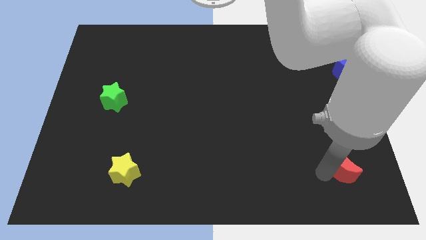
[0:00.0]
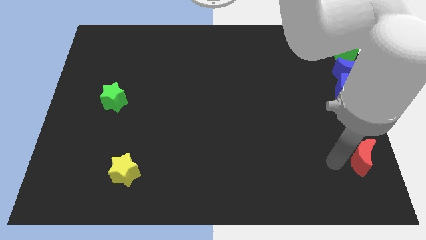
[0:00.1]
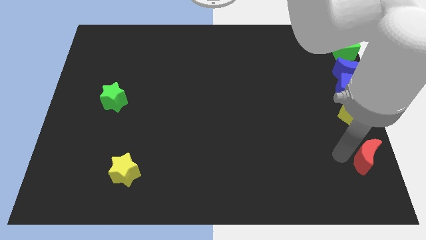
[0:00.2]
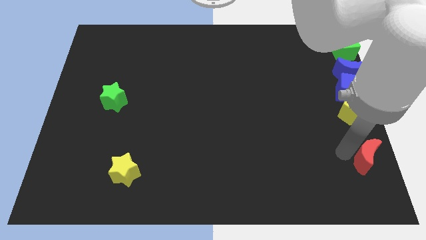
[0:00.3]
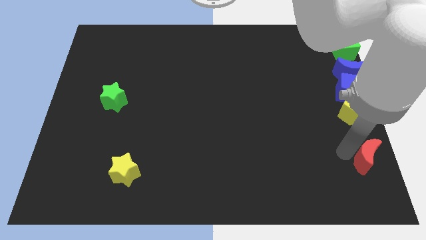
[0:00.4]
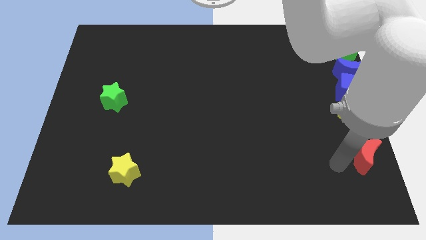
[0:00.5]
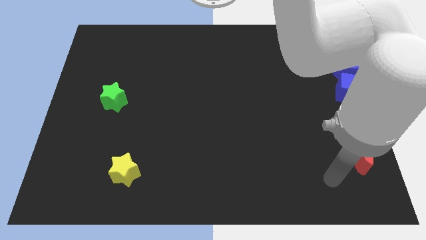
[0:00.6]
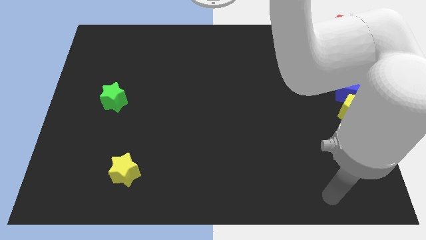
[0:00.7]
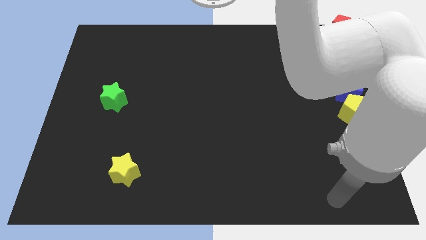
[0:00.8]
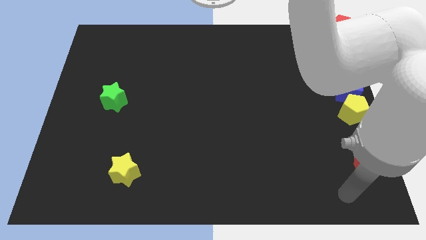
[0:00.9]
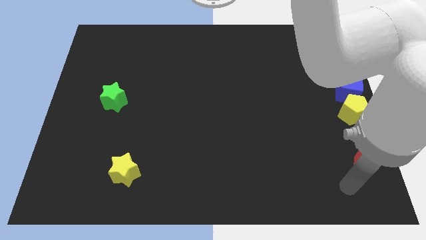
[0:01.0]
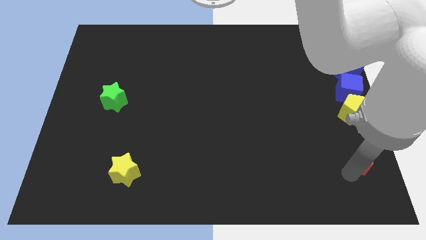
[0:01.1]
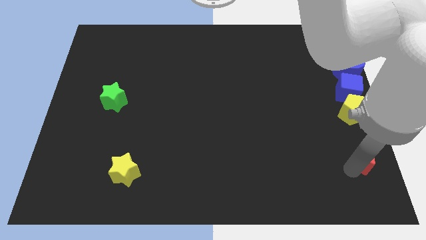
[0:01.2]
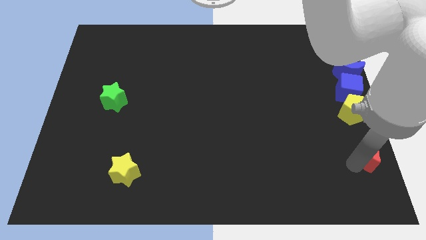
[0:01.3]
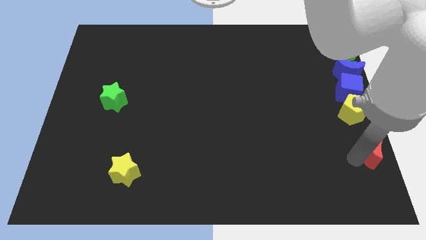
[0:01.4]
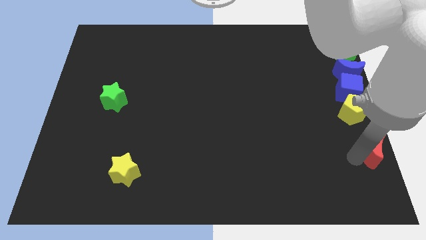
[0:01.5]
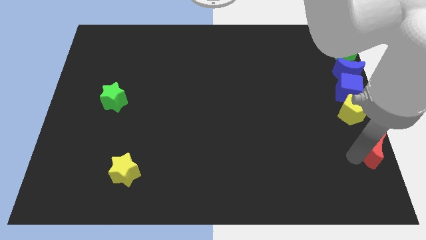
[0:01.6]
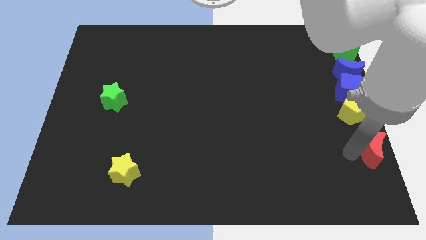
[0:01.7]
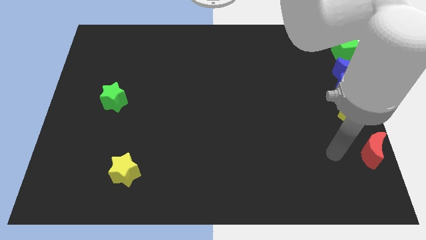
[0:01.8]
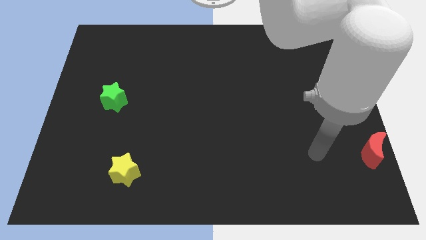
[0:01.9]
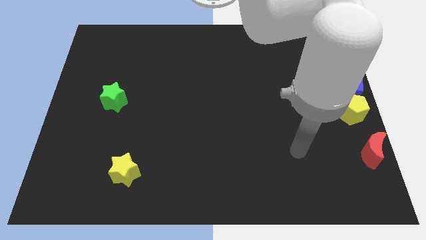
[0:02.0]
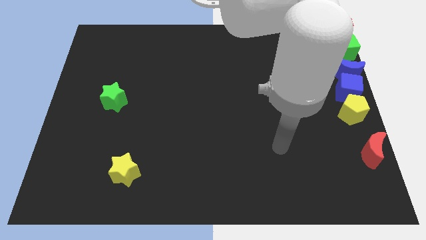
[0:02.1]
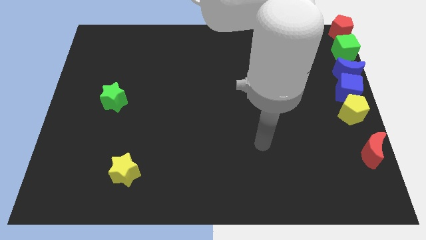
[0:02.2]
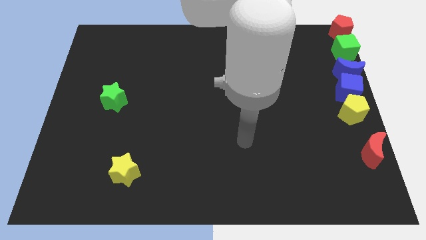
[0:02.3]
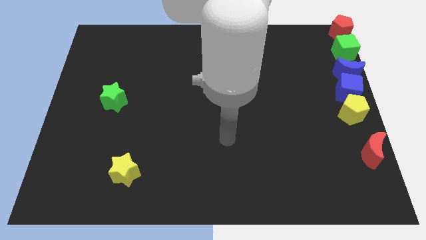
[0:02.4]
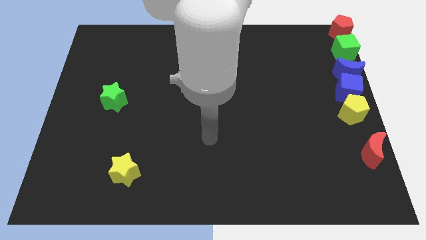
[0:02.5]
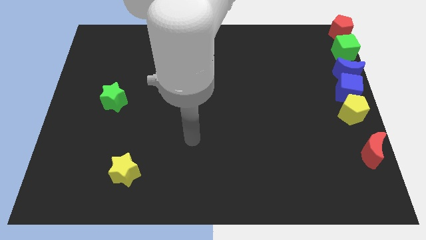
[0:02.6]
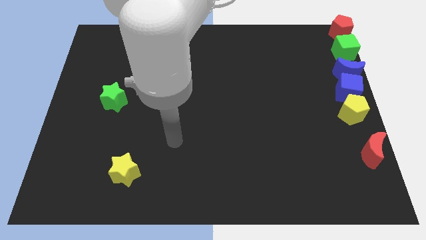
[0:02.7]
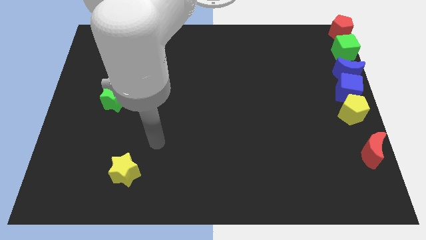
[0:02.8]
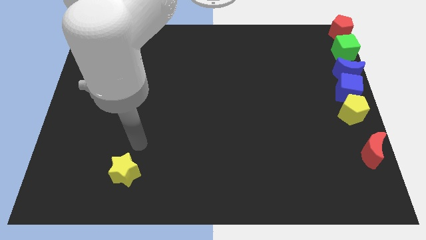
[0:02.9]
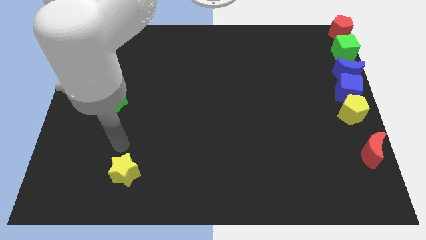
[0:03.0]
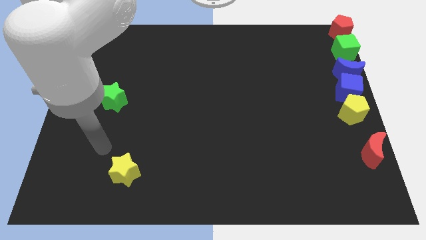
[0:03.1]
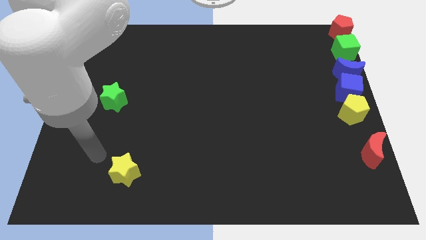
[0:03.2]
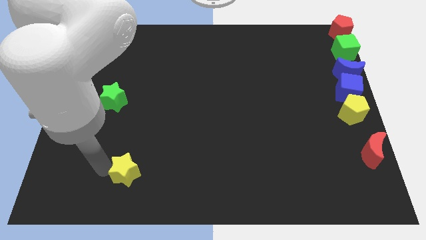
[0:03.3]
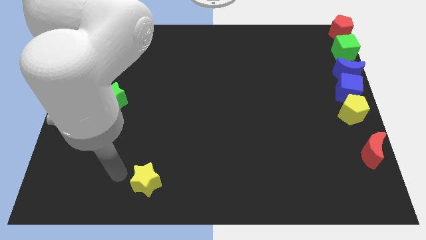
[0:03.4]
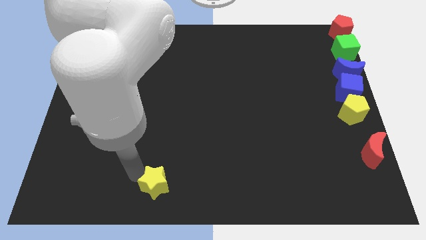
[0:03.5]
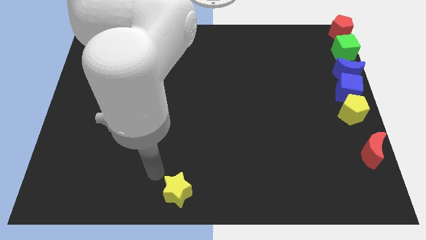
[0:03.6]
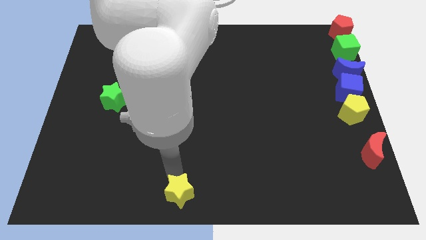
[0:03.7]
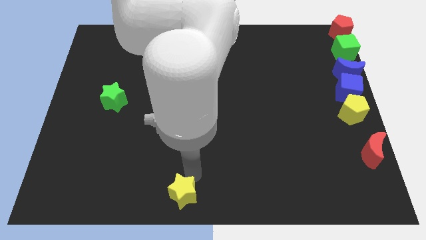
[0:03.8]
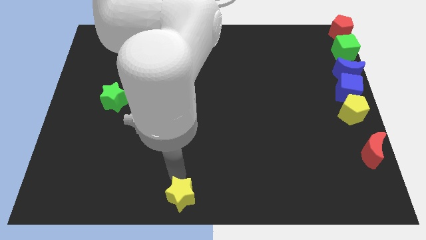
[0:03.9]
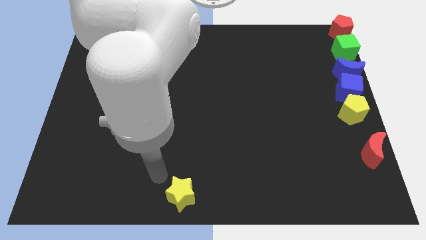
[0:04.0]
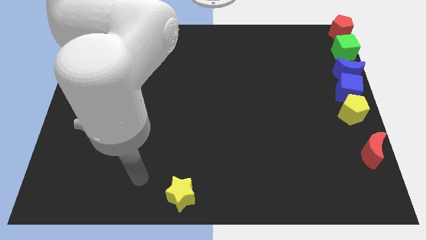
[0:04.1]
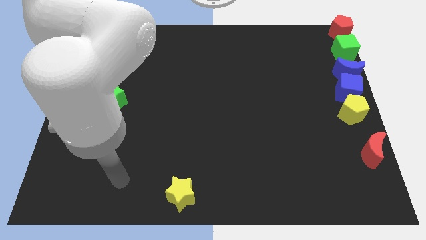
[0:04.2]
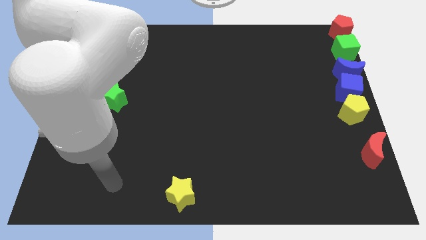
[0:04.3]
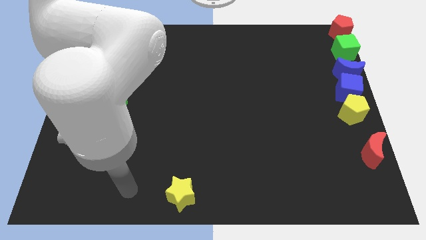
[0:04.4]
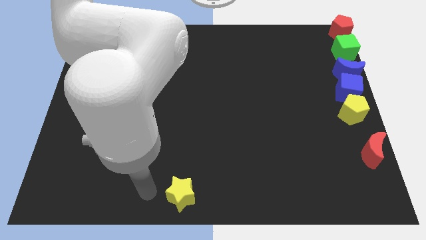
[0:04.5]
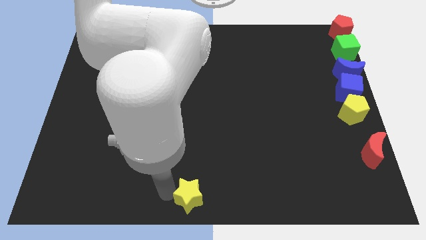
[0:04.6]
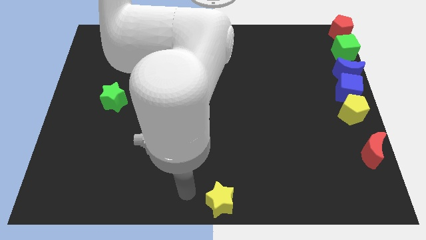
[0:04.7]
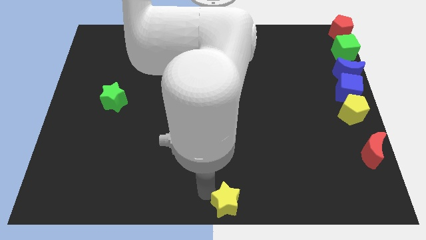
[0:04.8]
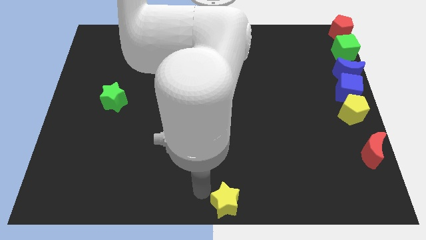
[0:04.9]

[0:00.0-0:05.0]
move the star to the bottom center of the board

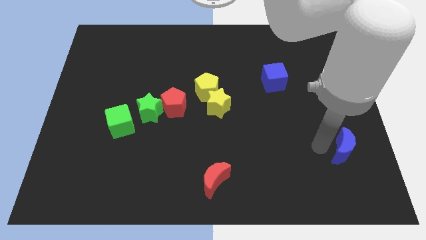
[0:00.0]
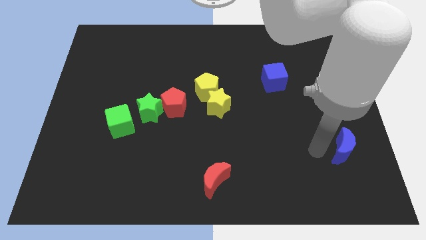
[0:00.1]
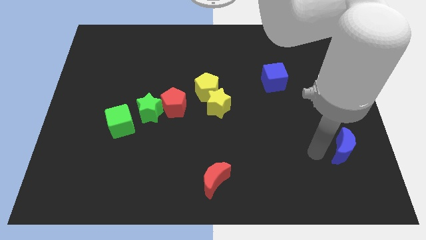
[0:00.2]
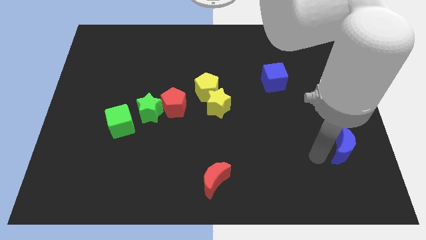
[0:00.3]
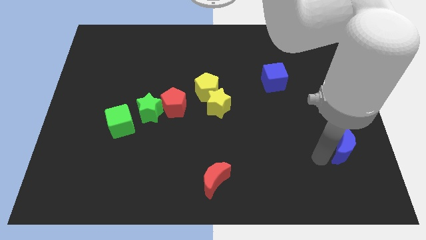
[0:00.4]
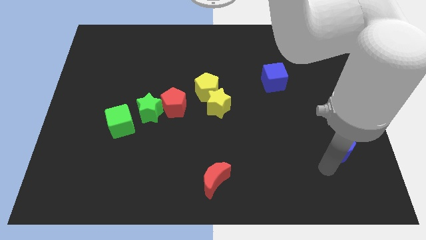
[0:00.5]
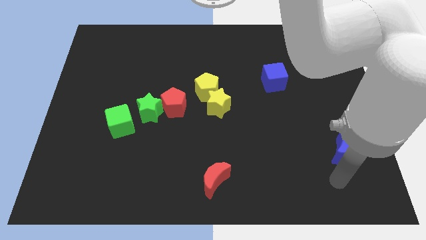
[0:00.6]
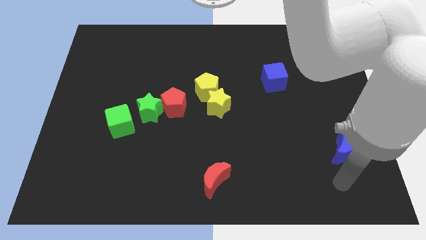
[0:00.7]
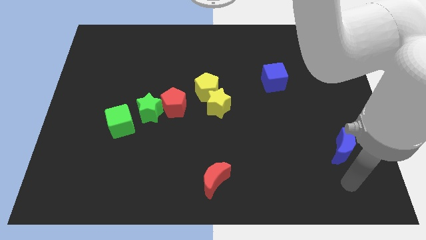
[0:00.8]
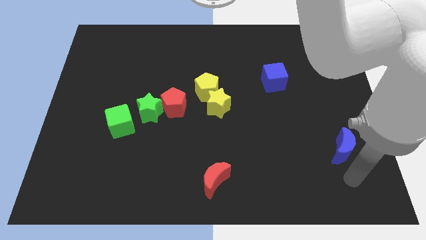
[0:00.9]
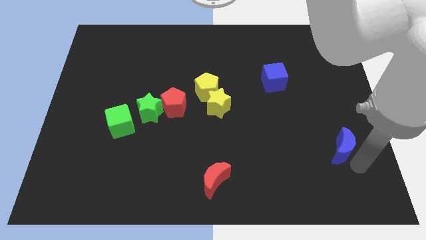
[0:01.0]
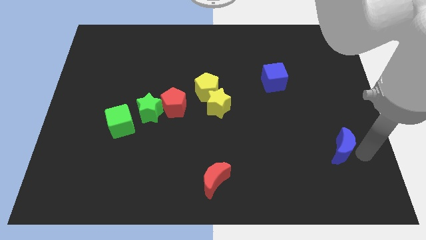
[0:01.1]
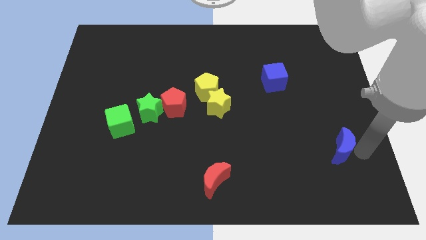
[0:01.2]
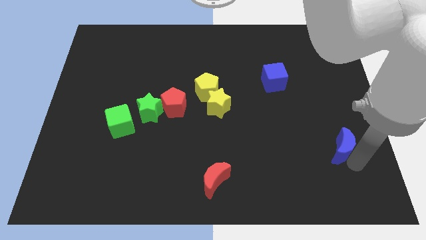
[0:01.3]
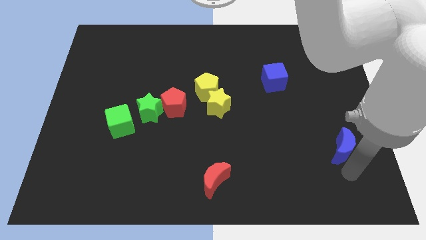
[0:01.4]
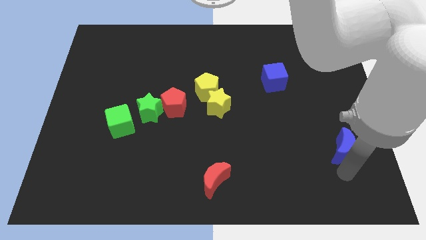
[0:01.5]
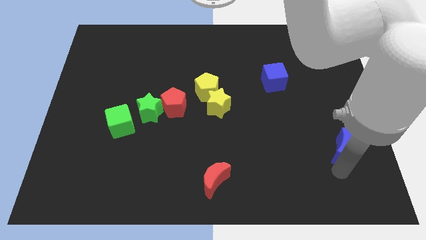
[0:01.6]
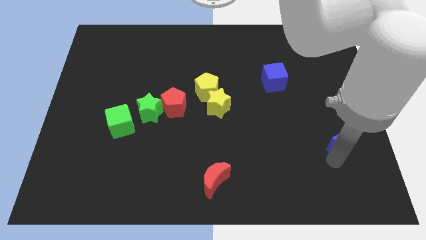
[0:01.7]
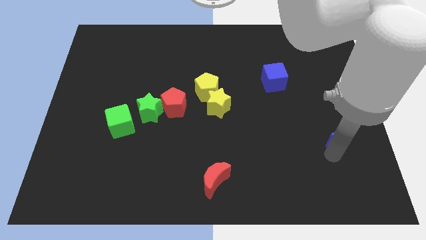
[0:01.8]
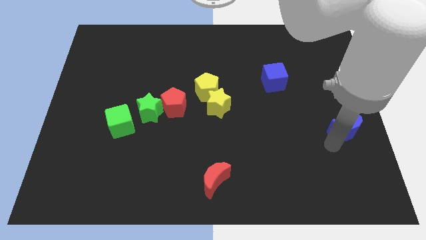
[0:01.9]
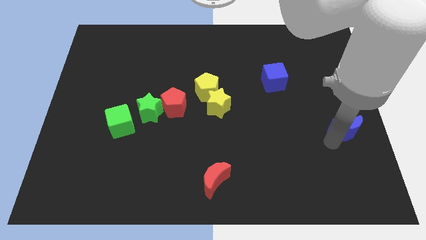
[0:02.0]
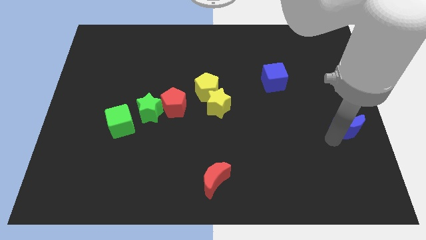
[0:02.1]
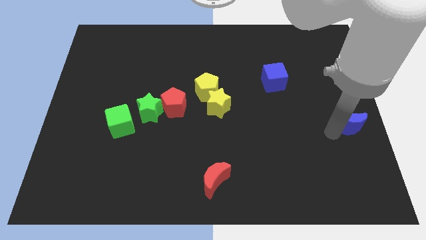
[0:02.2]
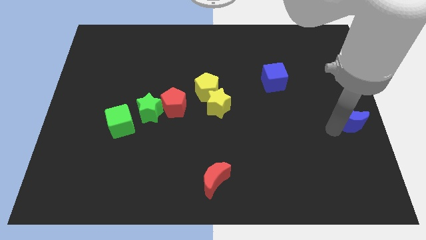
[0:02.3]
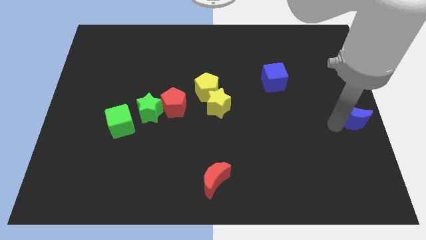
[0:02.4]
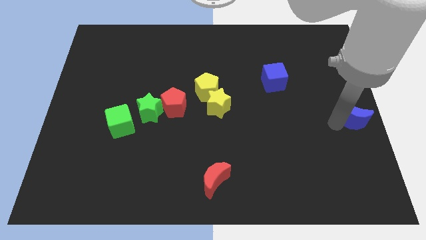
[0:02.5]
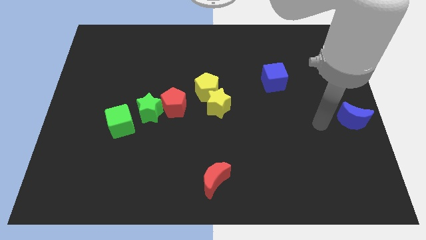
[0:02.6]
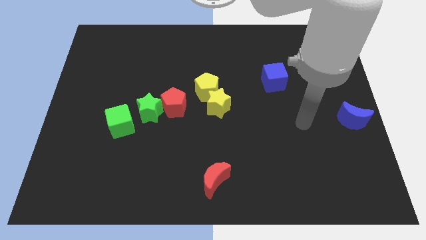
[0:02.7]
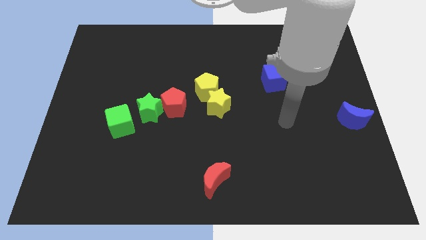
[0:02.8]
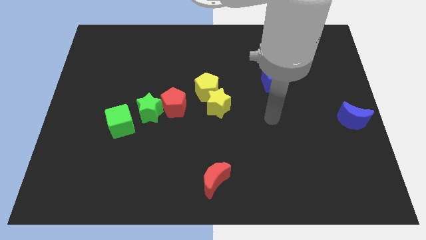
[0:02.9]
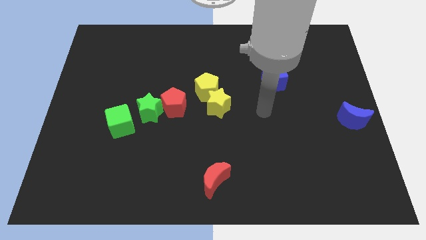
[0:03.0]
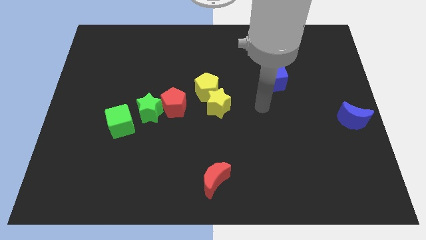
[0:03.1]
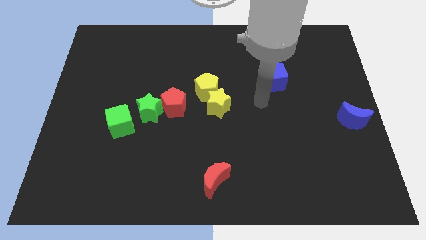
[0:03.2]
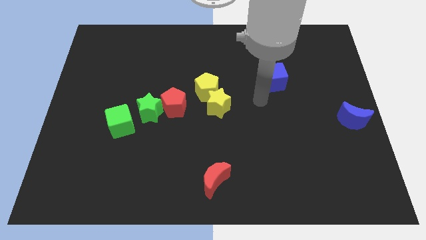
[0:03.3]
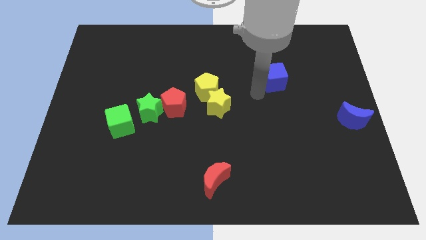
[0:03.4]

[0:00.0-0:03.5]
place the blue moon at the center right of the board

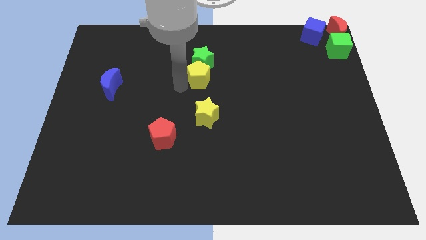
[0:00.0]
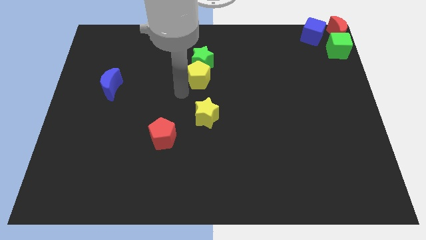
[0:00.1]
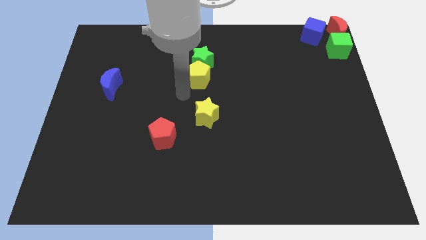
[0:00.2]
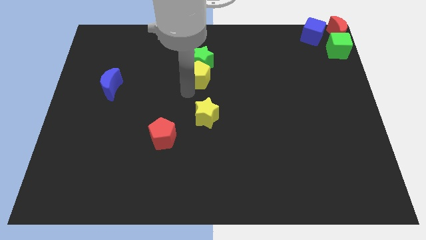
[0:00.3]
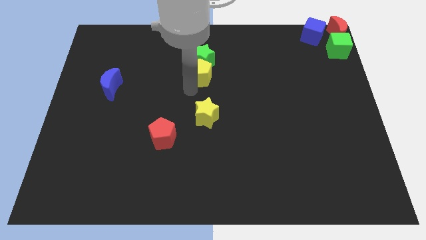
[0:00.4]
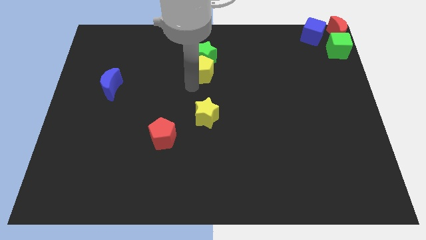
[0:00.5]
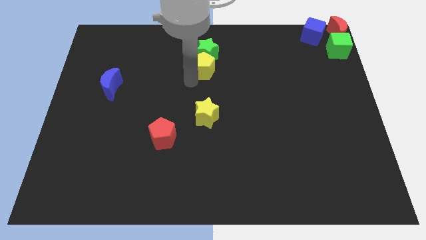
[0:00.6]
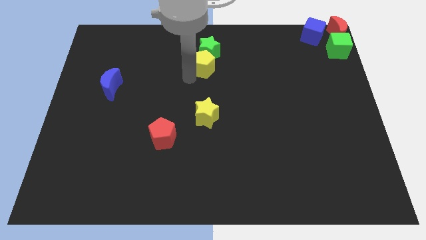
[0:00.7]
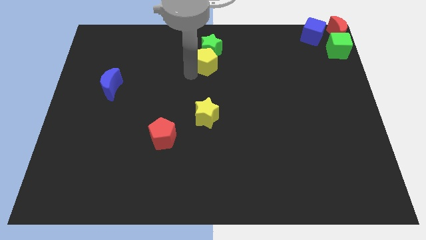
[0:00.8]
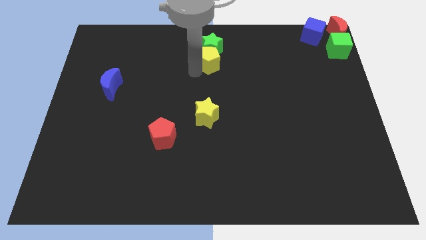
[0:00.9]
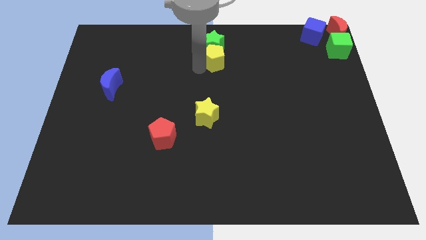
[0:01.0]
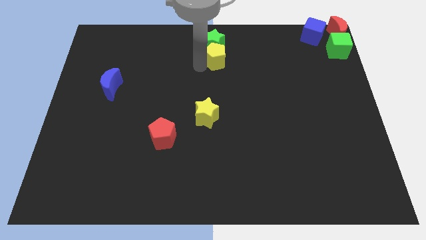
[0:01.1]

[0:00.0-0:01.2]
push the yellow pentagon and green star to the top center
